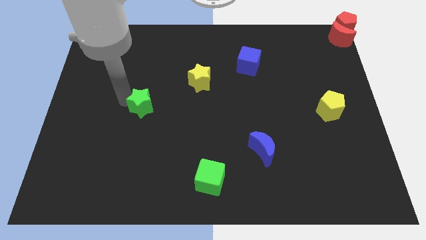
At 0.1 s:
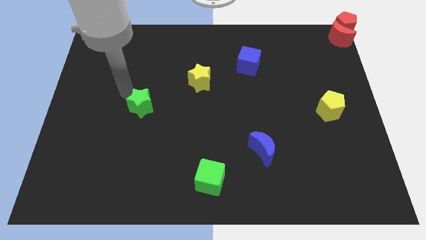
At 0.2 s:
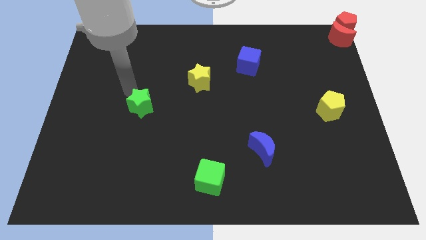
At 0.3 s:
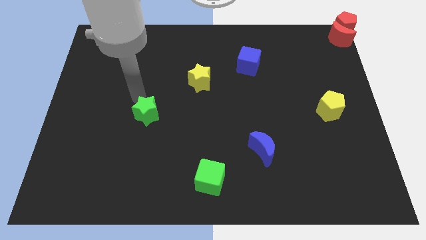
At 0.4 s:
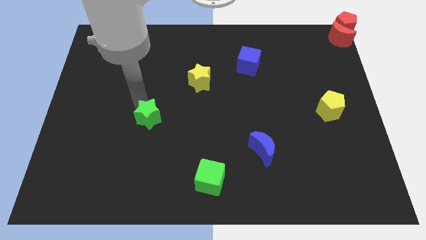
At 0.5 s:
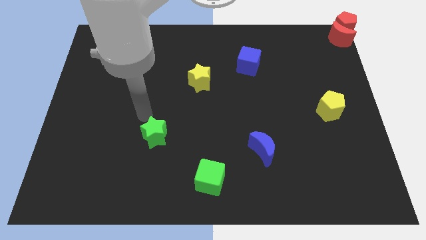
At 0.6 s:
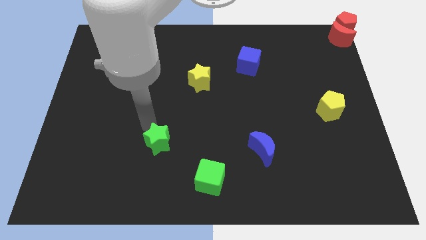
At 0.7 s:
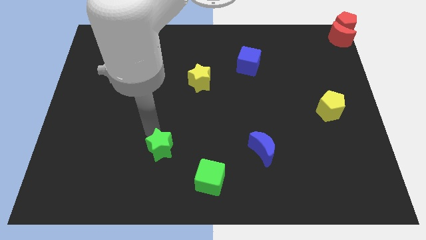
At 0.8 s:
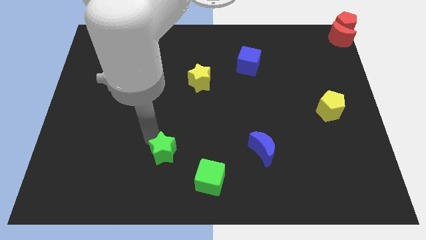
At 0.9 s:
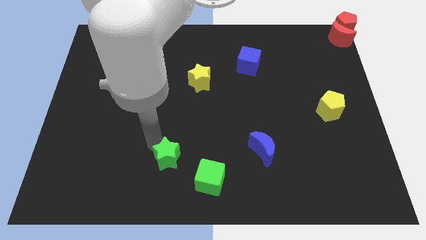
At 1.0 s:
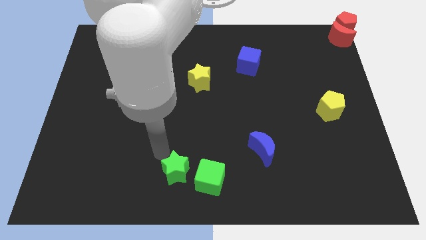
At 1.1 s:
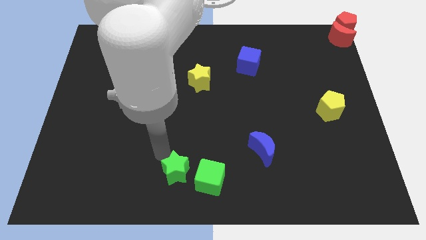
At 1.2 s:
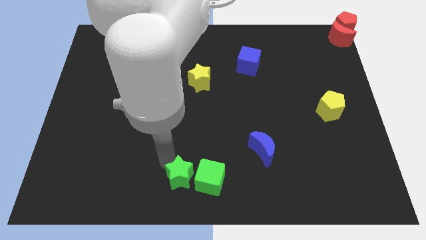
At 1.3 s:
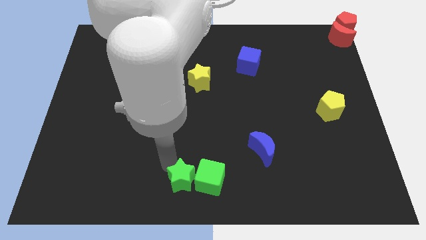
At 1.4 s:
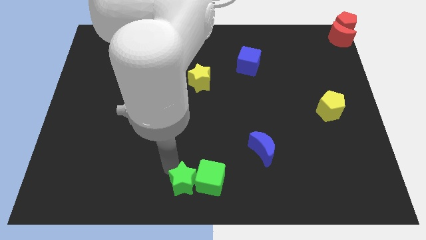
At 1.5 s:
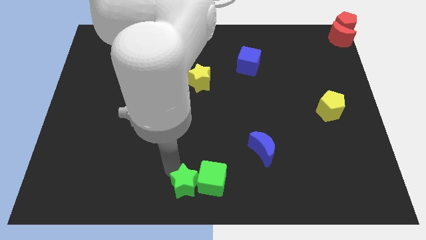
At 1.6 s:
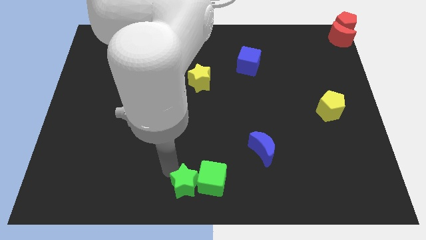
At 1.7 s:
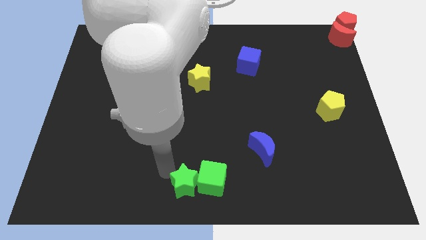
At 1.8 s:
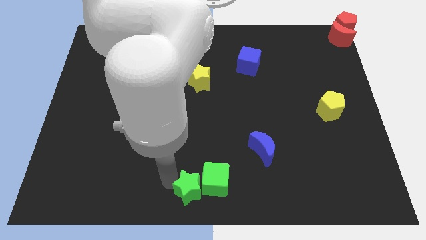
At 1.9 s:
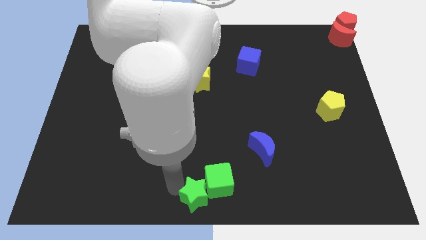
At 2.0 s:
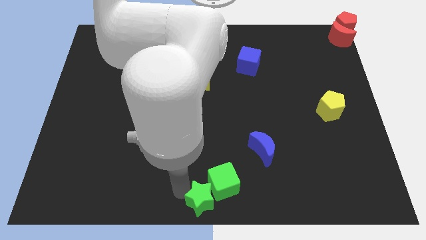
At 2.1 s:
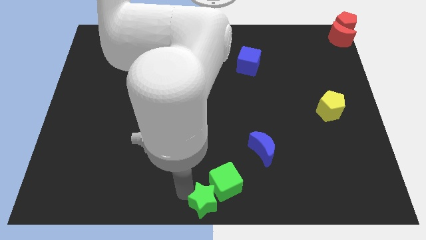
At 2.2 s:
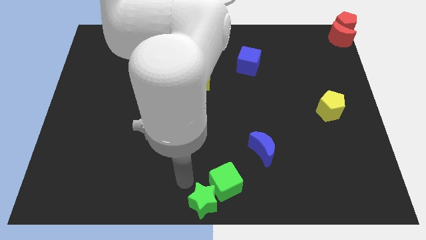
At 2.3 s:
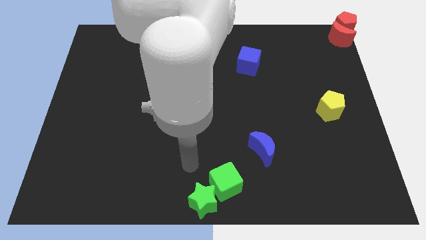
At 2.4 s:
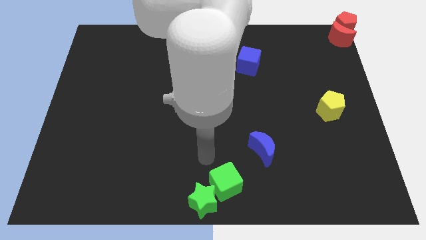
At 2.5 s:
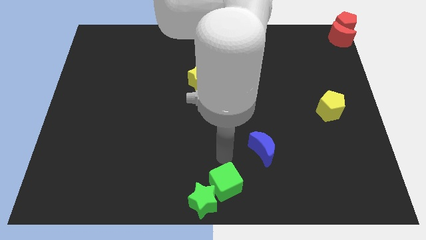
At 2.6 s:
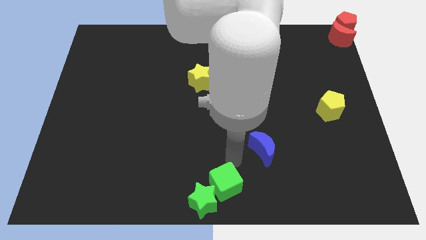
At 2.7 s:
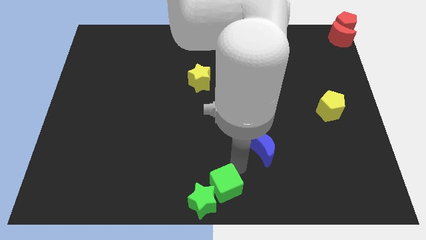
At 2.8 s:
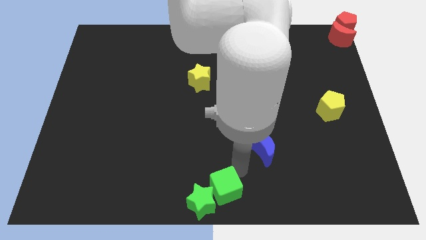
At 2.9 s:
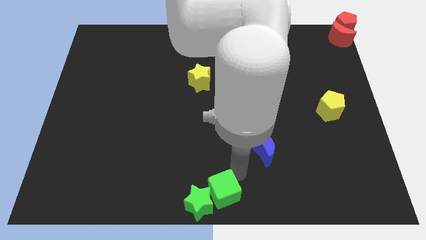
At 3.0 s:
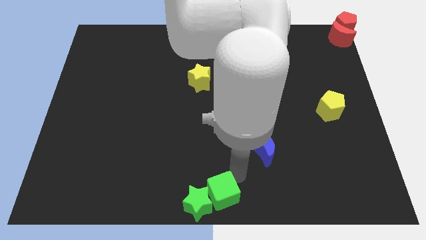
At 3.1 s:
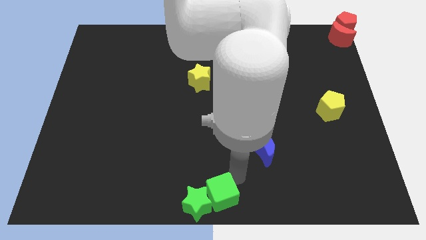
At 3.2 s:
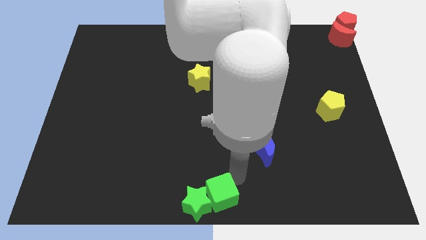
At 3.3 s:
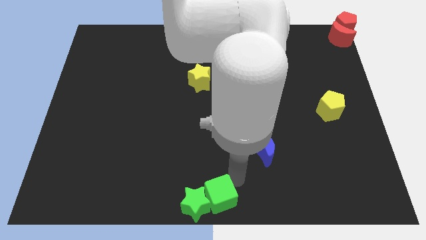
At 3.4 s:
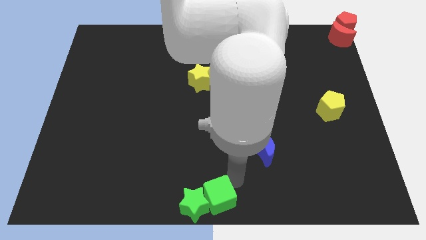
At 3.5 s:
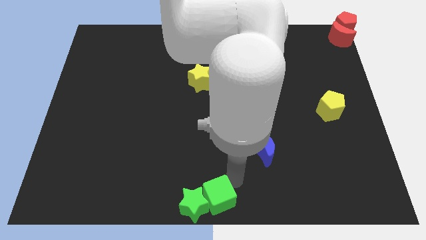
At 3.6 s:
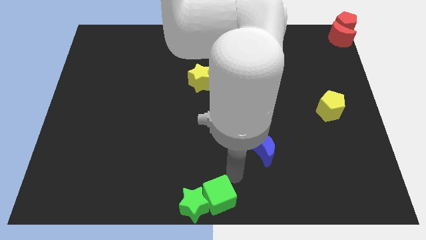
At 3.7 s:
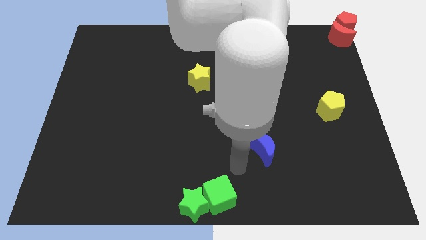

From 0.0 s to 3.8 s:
push the green cube and green star towards the bottom center of the board

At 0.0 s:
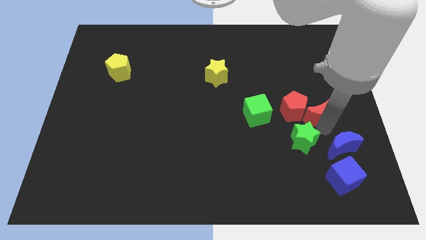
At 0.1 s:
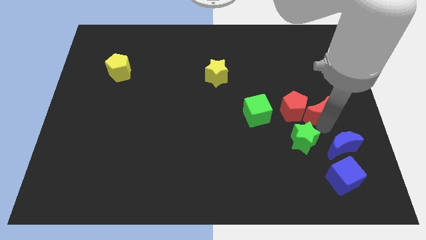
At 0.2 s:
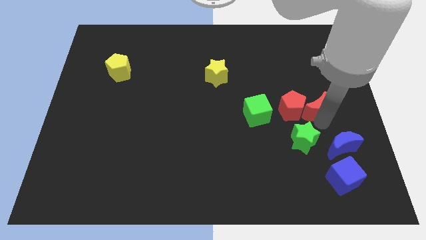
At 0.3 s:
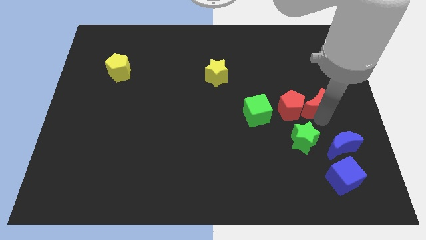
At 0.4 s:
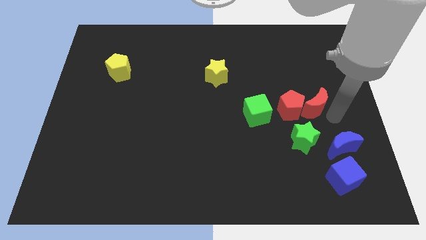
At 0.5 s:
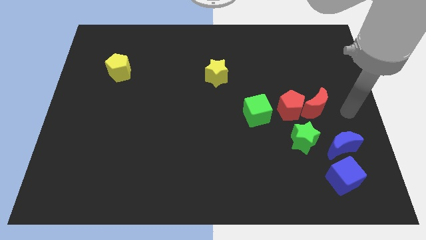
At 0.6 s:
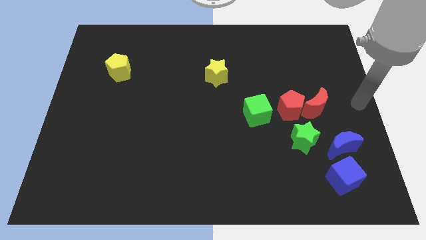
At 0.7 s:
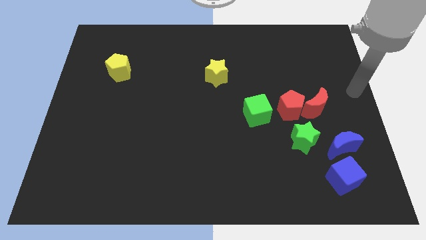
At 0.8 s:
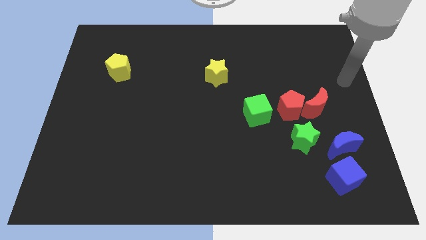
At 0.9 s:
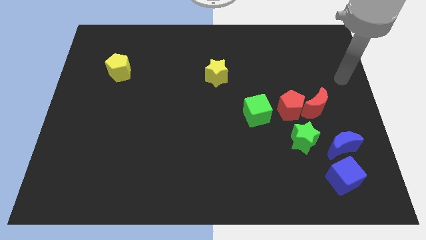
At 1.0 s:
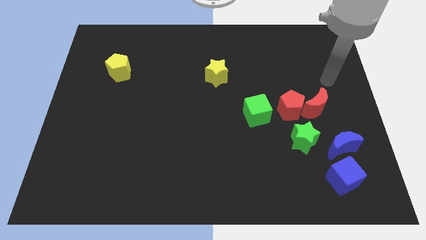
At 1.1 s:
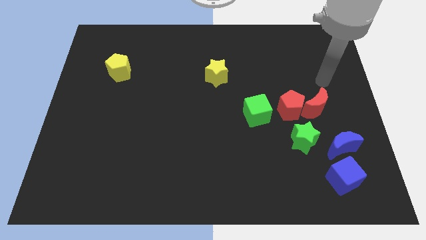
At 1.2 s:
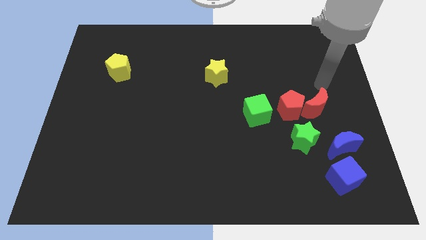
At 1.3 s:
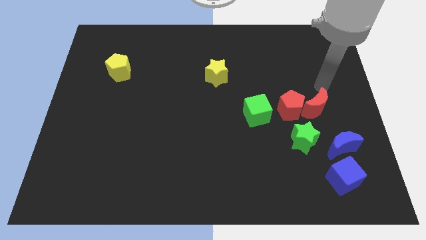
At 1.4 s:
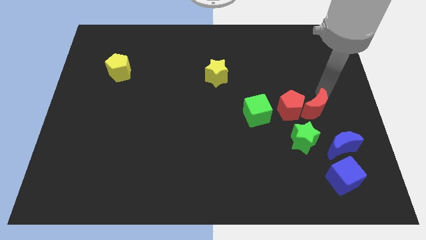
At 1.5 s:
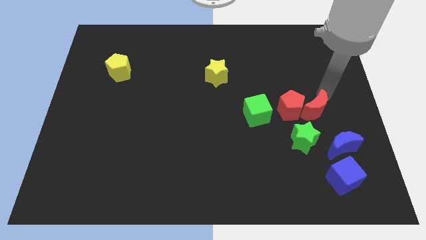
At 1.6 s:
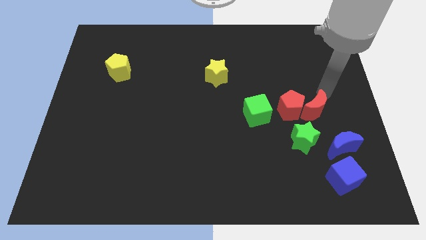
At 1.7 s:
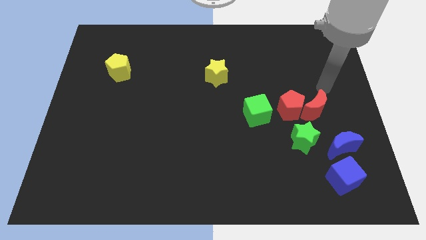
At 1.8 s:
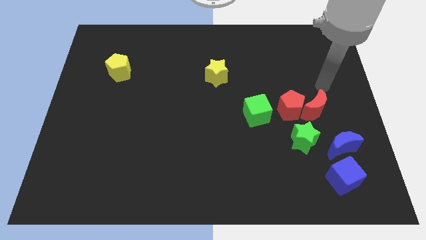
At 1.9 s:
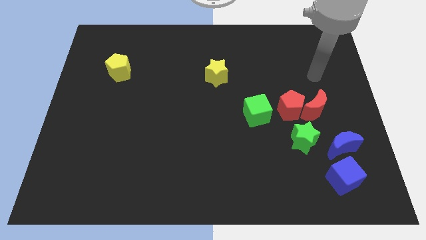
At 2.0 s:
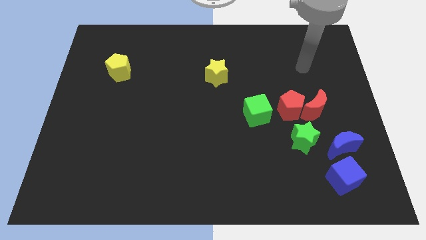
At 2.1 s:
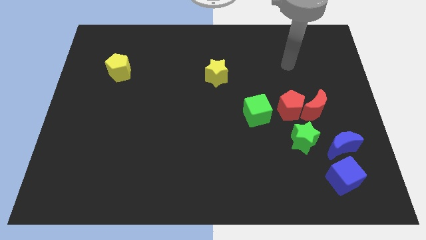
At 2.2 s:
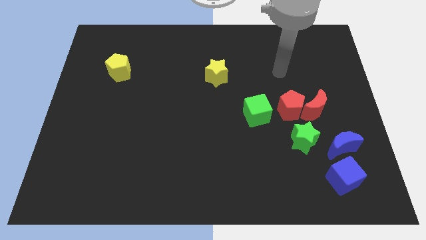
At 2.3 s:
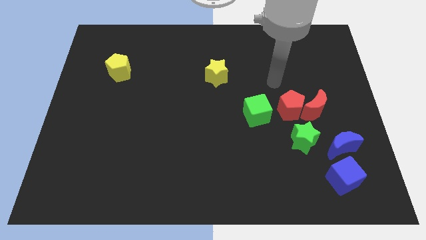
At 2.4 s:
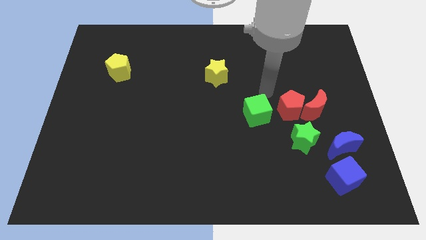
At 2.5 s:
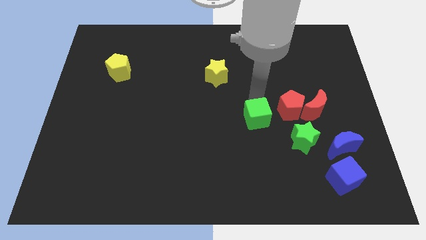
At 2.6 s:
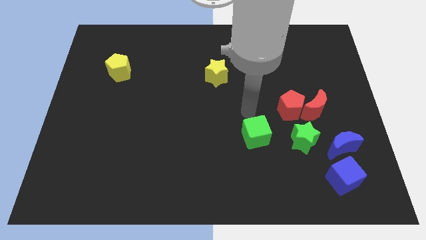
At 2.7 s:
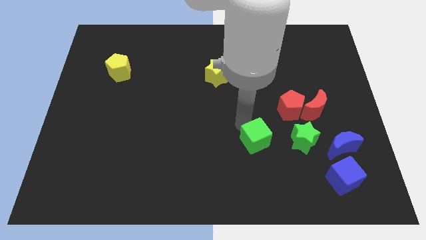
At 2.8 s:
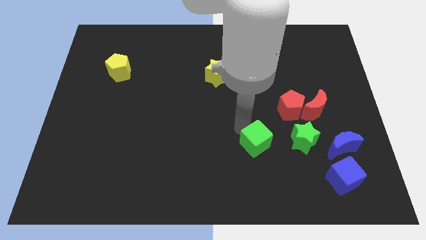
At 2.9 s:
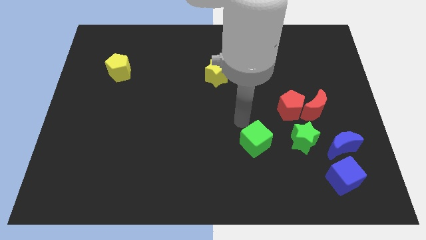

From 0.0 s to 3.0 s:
push the green cube down wards

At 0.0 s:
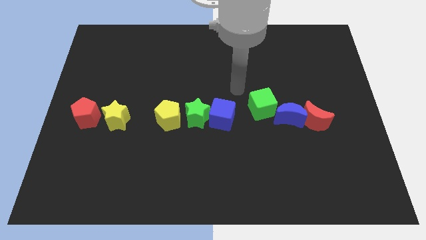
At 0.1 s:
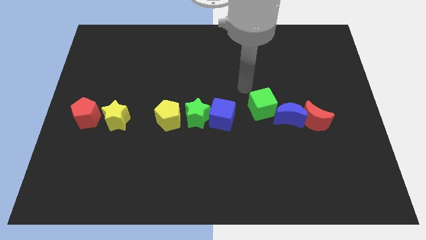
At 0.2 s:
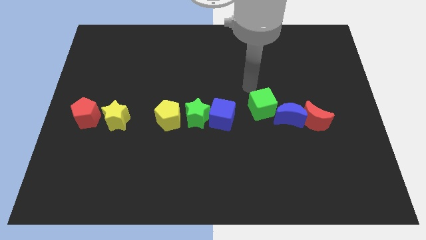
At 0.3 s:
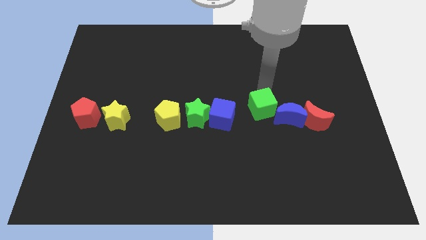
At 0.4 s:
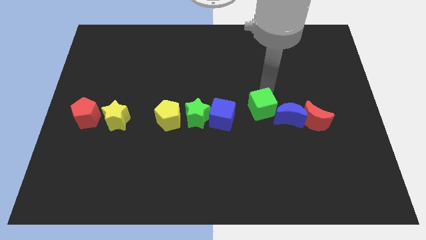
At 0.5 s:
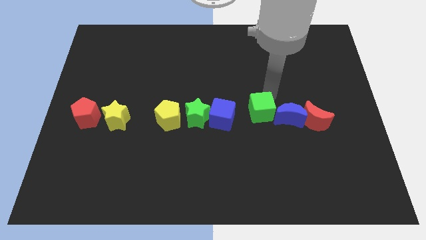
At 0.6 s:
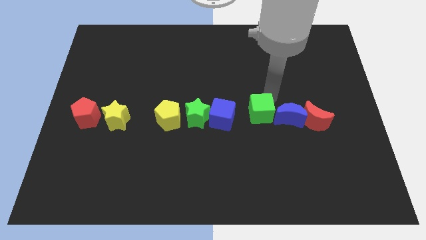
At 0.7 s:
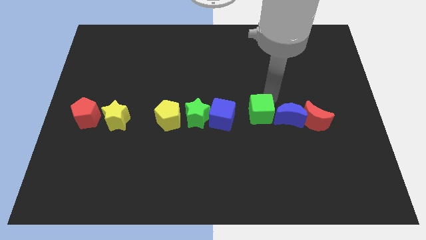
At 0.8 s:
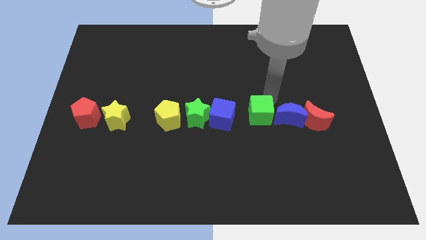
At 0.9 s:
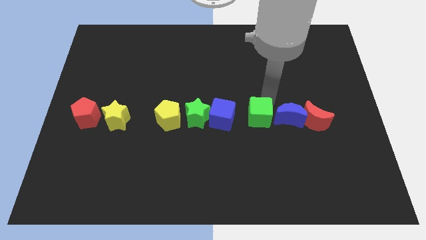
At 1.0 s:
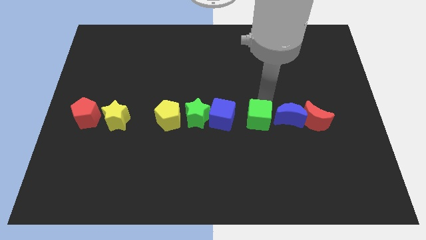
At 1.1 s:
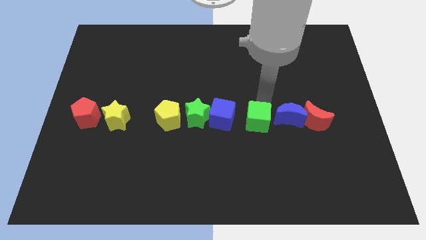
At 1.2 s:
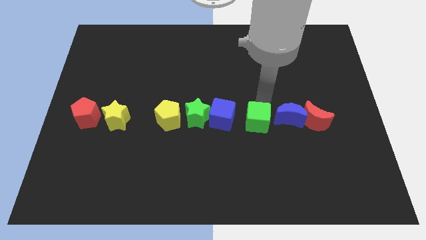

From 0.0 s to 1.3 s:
place the green cube left to the blue crescent

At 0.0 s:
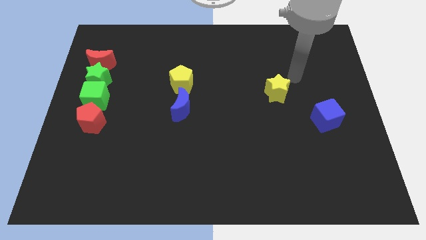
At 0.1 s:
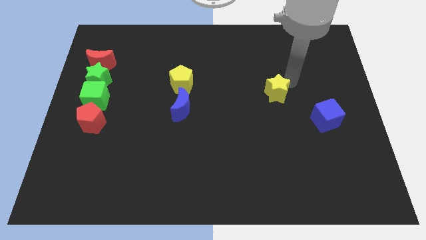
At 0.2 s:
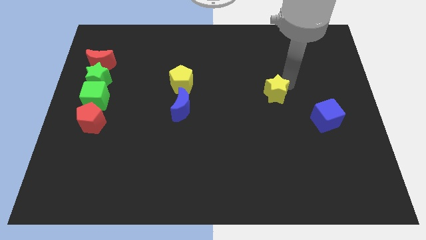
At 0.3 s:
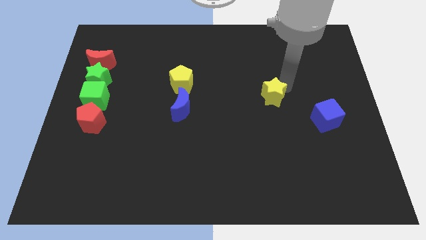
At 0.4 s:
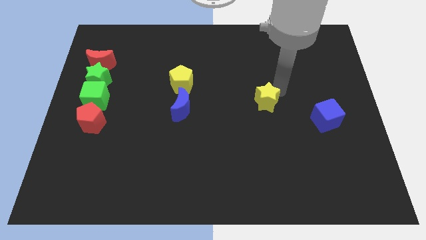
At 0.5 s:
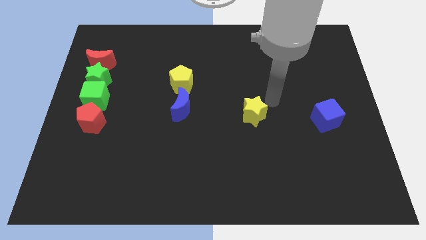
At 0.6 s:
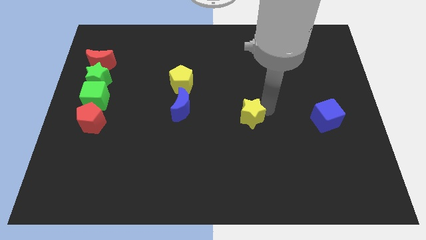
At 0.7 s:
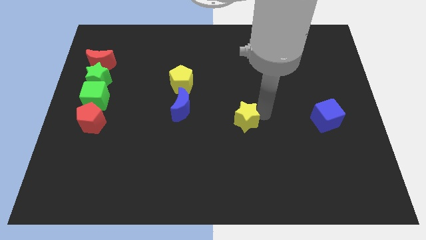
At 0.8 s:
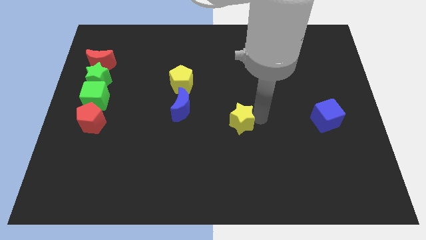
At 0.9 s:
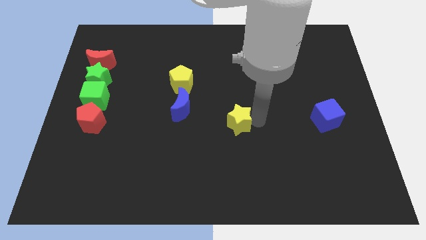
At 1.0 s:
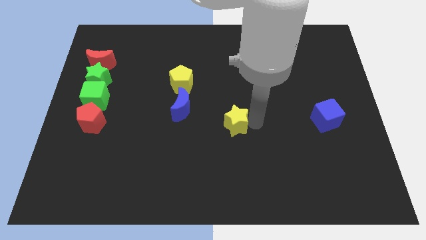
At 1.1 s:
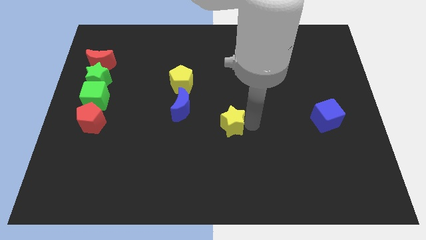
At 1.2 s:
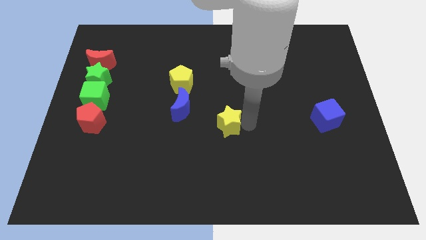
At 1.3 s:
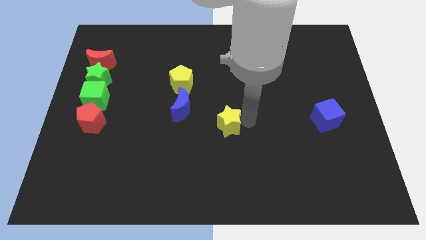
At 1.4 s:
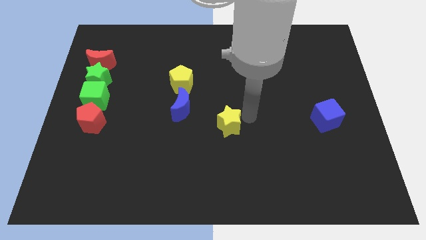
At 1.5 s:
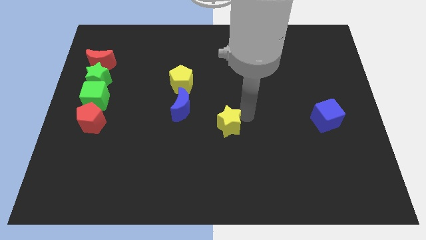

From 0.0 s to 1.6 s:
push the yellow star to the left of the board
